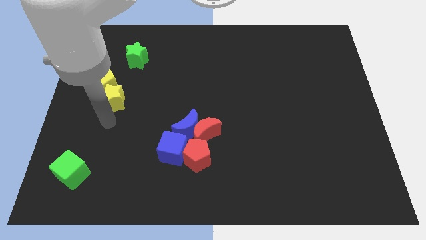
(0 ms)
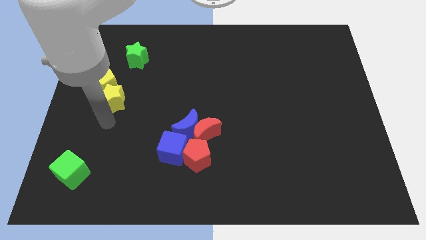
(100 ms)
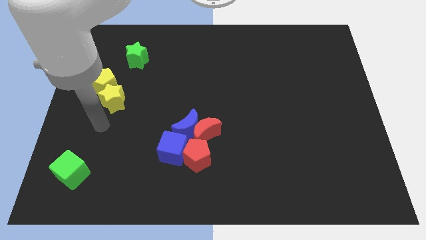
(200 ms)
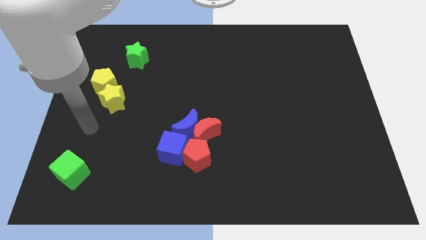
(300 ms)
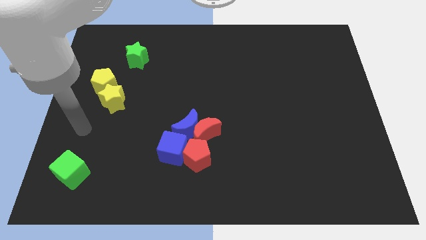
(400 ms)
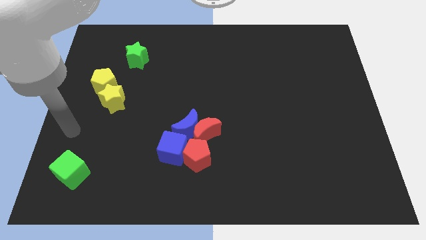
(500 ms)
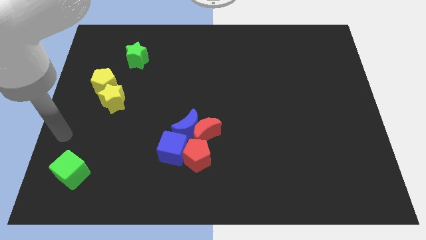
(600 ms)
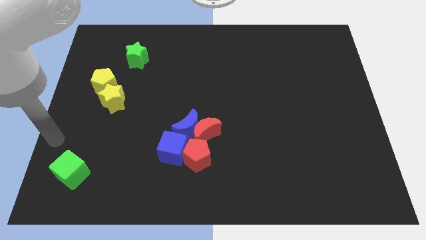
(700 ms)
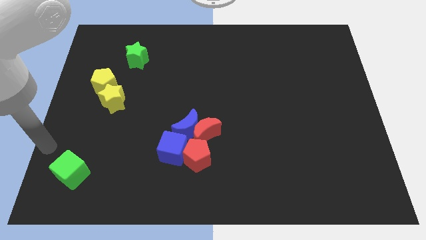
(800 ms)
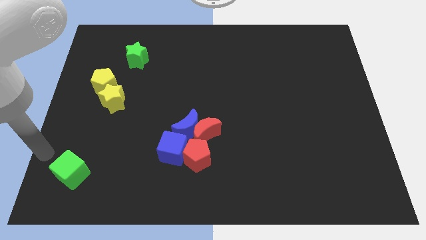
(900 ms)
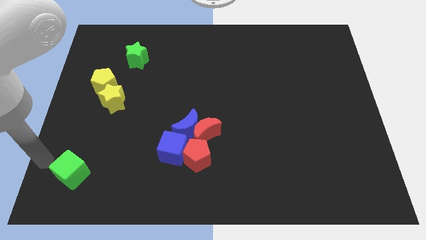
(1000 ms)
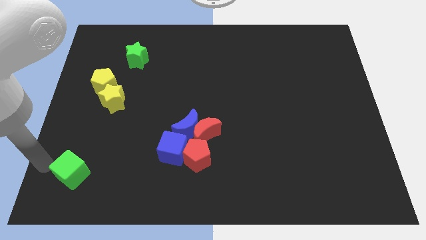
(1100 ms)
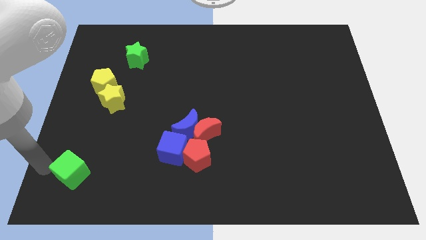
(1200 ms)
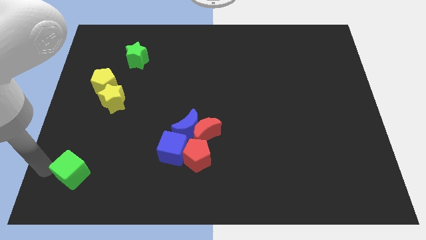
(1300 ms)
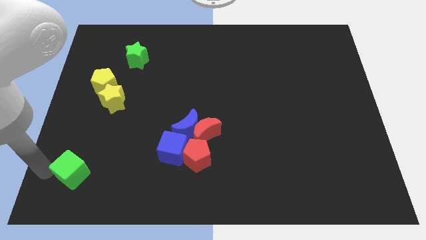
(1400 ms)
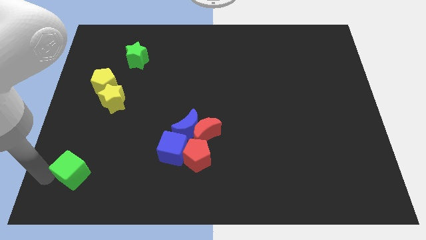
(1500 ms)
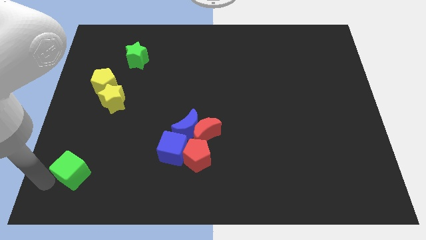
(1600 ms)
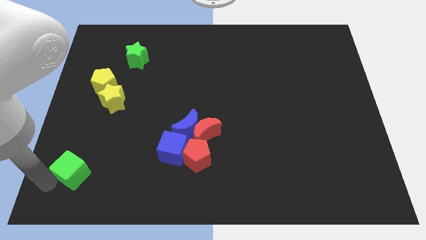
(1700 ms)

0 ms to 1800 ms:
move your arm away from the yellow star

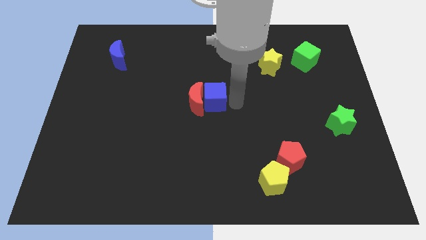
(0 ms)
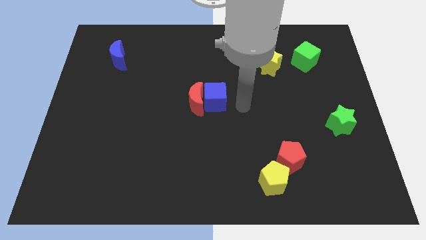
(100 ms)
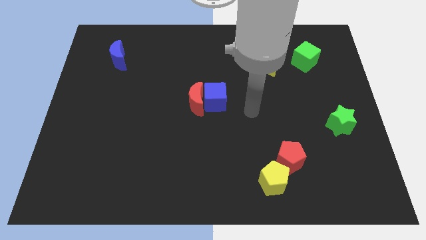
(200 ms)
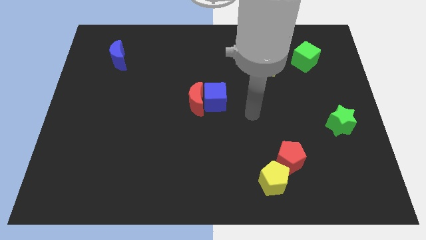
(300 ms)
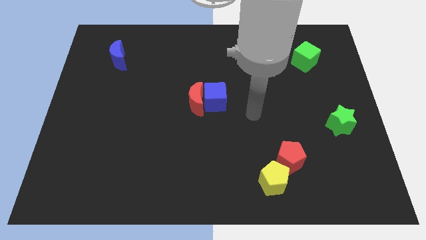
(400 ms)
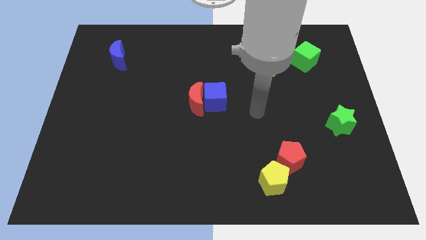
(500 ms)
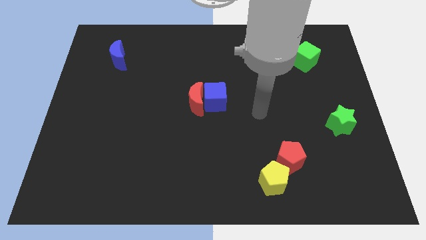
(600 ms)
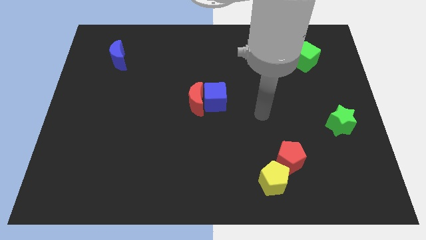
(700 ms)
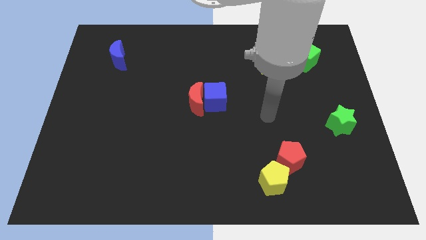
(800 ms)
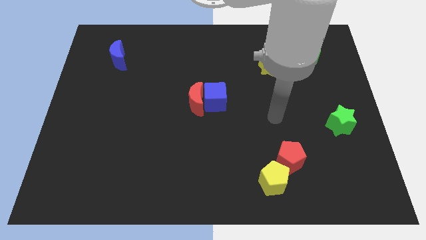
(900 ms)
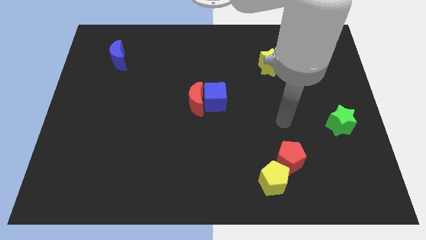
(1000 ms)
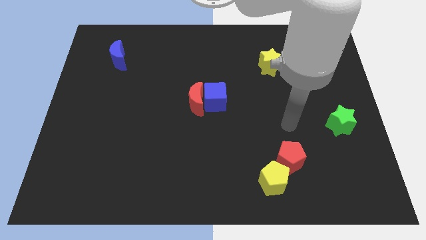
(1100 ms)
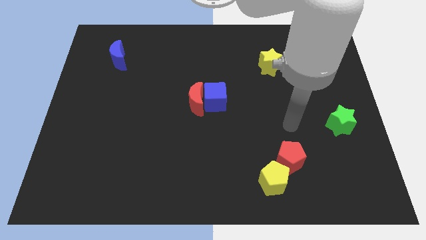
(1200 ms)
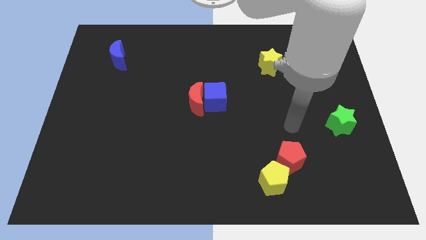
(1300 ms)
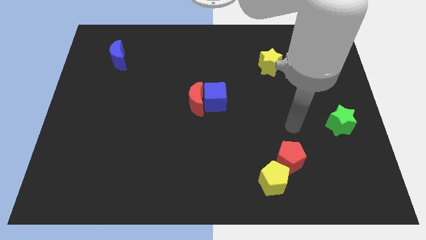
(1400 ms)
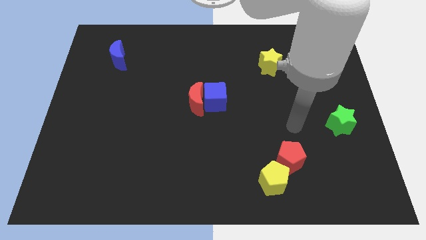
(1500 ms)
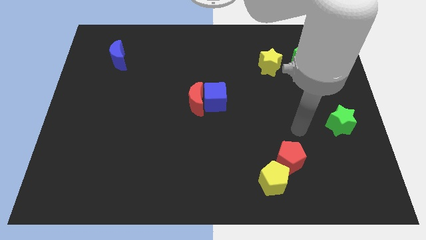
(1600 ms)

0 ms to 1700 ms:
move your arm away from the blue cube

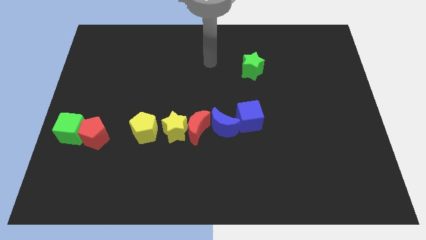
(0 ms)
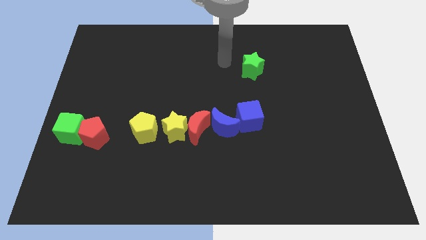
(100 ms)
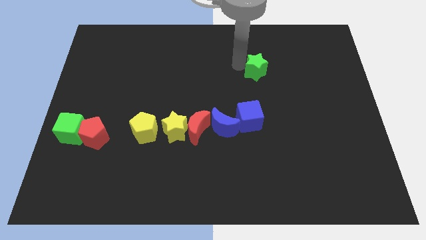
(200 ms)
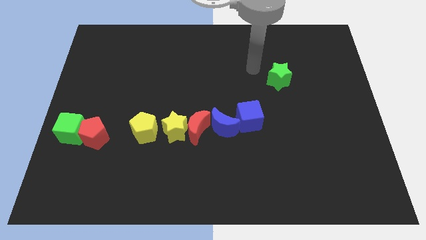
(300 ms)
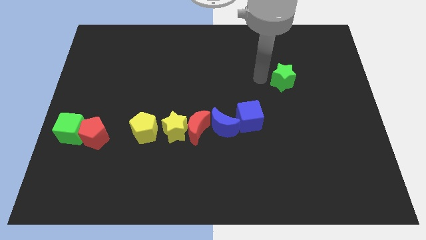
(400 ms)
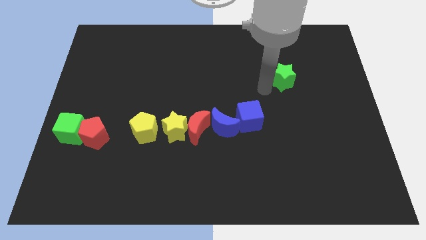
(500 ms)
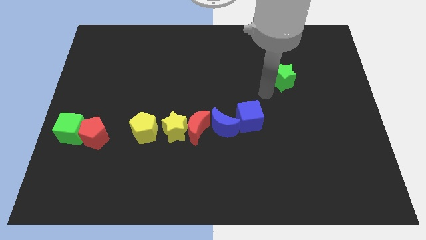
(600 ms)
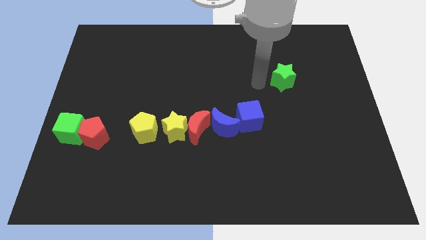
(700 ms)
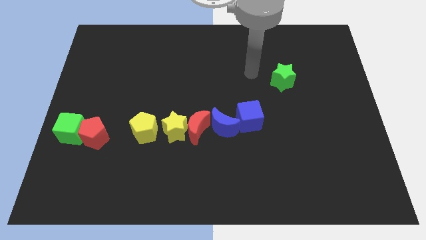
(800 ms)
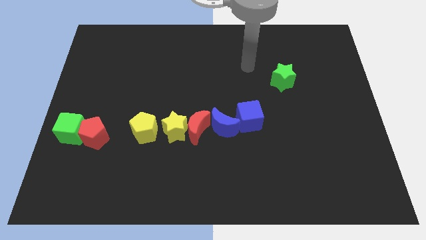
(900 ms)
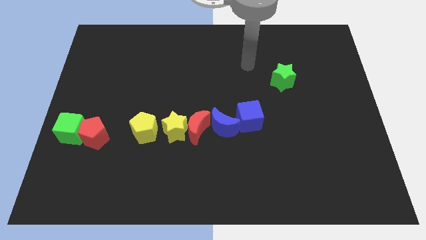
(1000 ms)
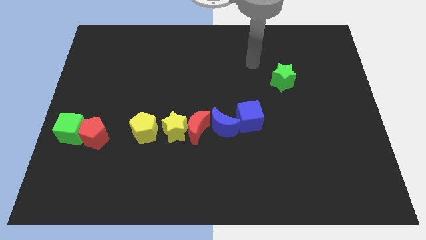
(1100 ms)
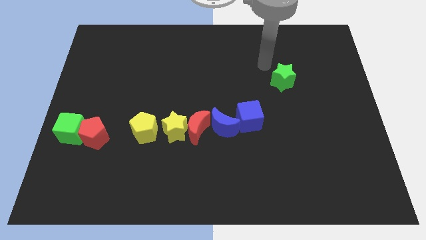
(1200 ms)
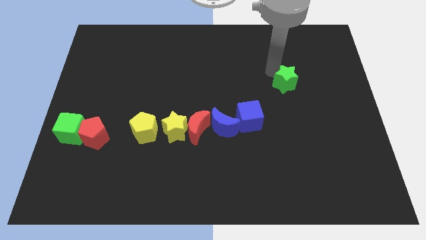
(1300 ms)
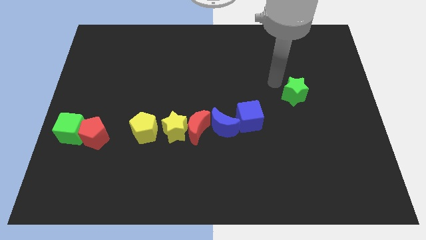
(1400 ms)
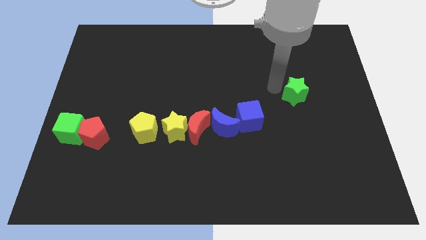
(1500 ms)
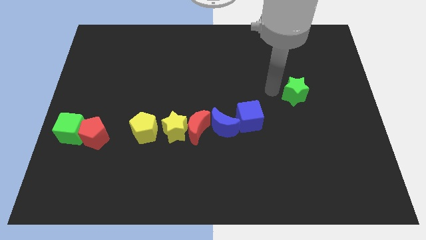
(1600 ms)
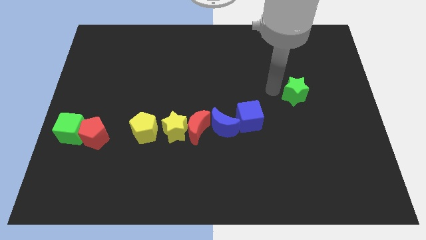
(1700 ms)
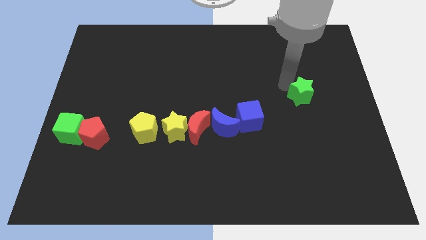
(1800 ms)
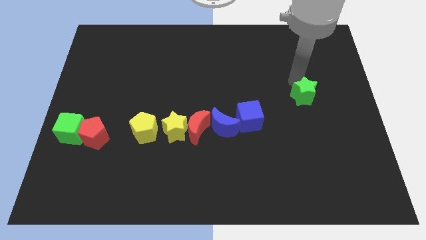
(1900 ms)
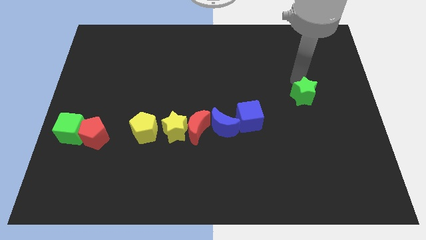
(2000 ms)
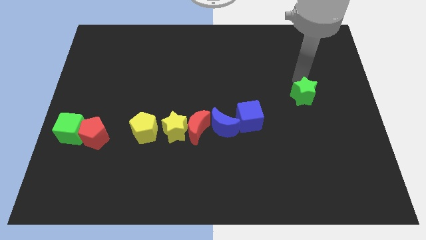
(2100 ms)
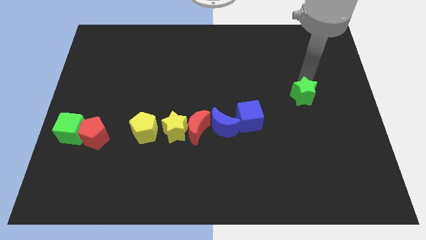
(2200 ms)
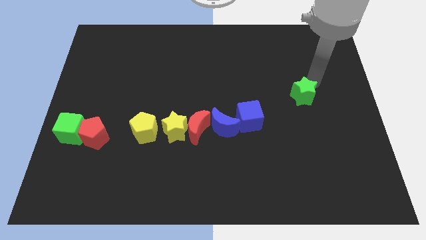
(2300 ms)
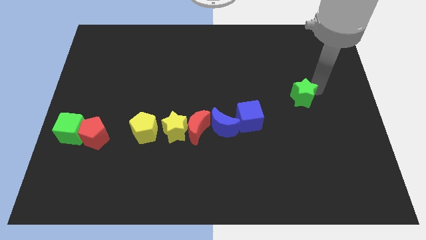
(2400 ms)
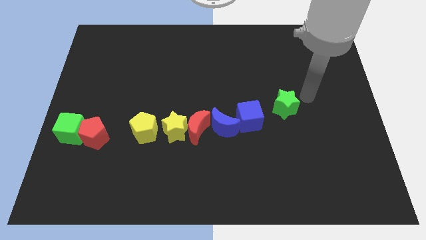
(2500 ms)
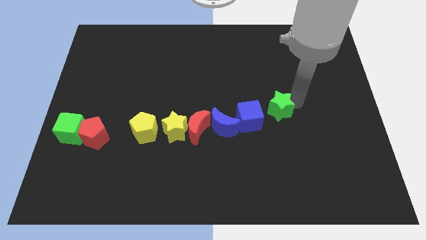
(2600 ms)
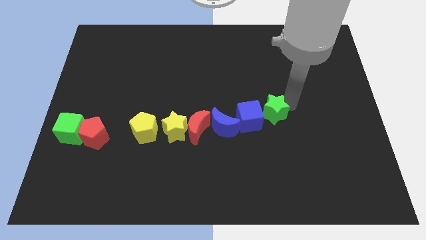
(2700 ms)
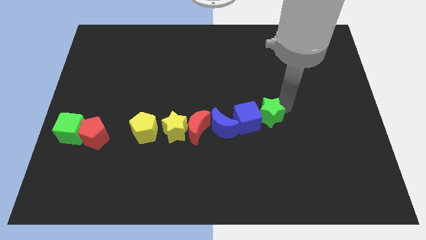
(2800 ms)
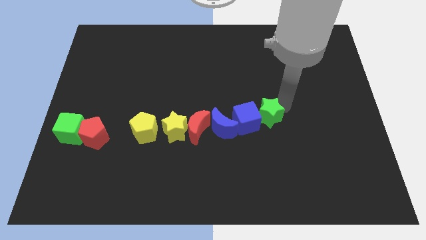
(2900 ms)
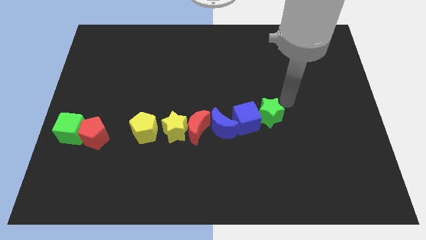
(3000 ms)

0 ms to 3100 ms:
place the green star towards the right of the blue cube

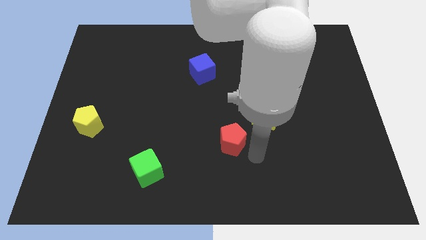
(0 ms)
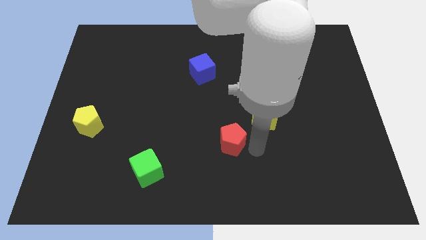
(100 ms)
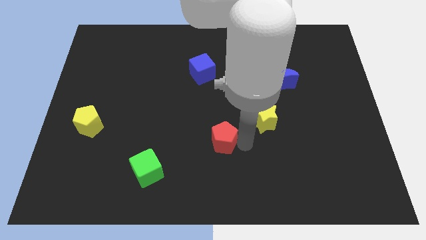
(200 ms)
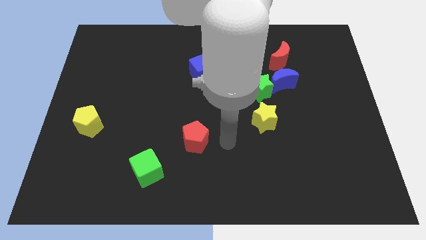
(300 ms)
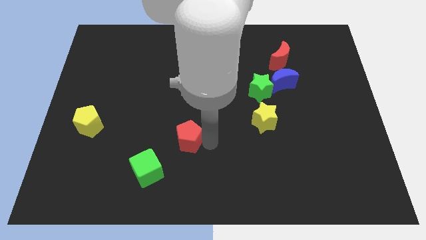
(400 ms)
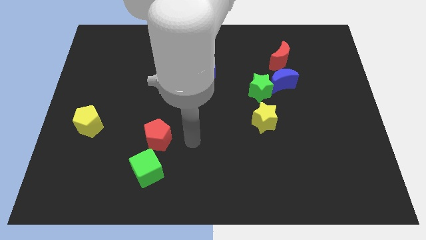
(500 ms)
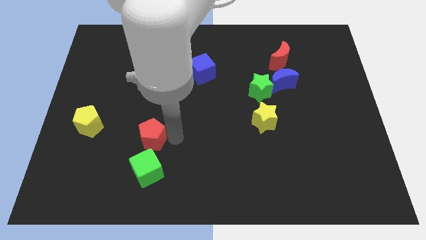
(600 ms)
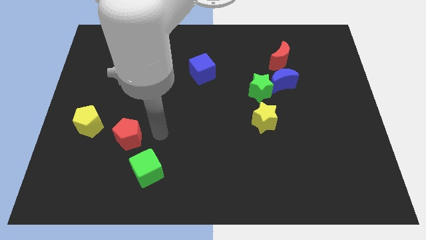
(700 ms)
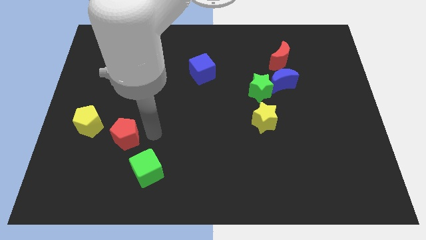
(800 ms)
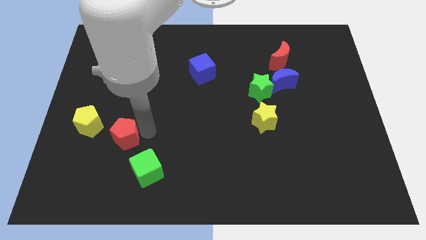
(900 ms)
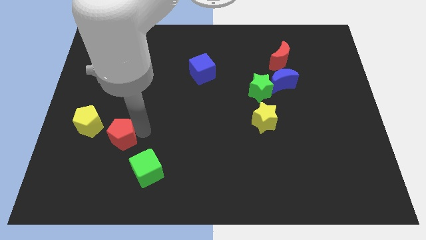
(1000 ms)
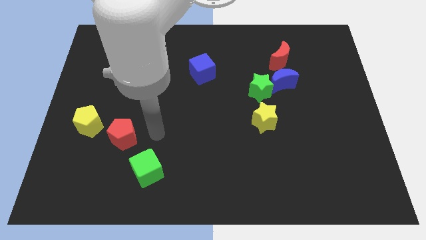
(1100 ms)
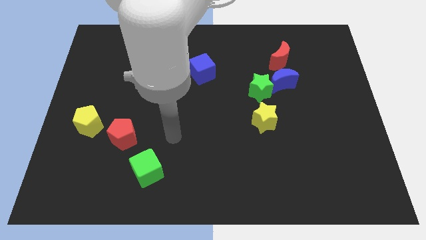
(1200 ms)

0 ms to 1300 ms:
push the red pentagon towards yellow pentagon

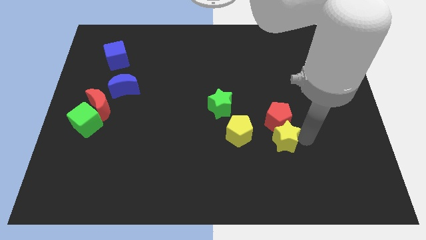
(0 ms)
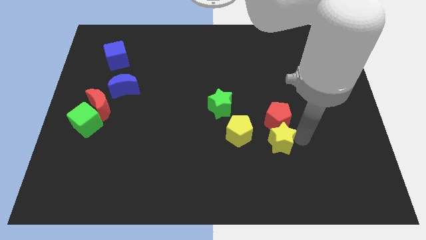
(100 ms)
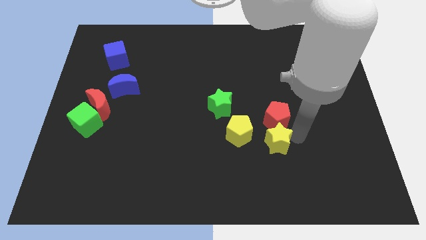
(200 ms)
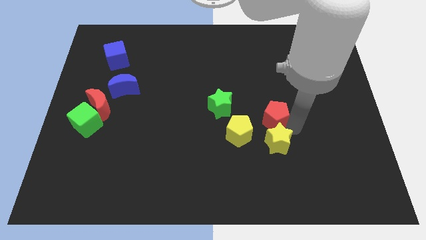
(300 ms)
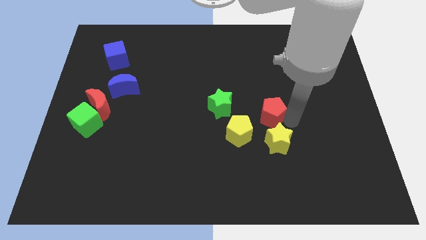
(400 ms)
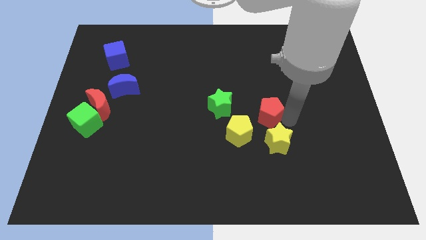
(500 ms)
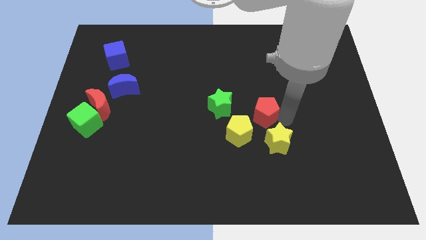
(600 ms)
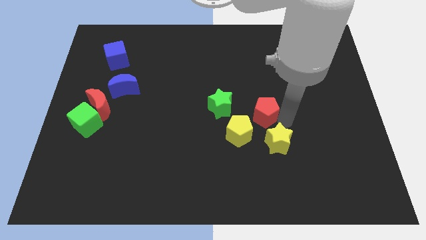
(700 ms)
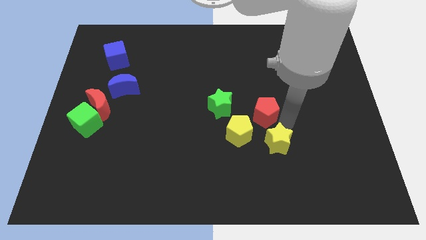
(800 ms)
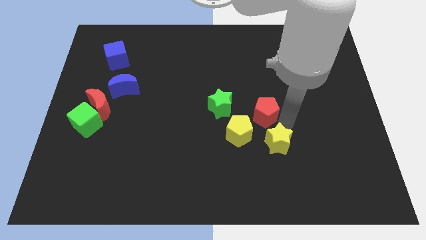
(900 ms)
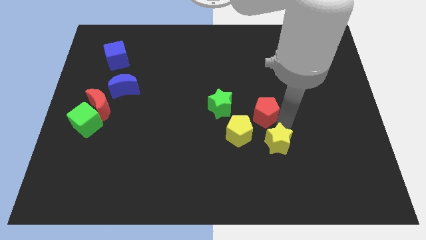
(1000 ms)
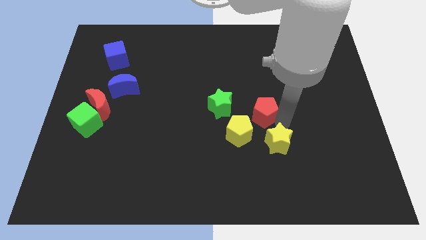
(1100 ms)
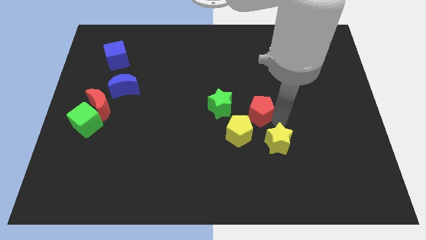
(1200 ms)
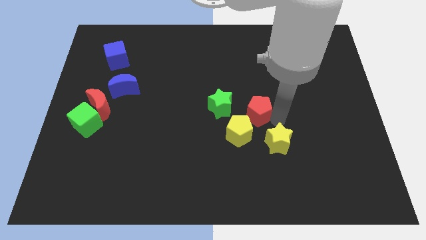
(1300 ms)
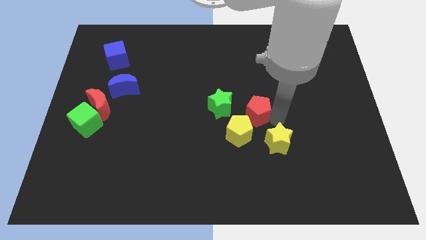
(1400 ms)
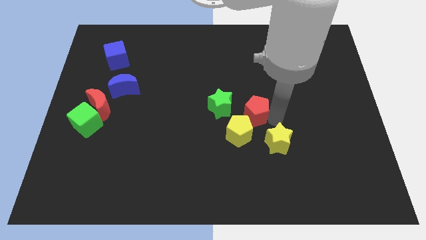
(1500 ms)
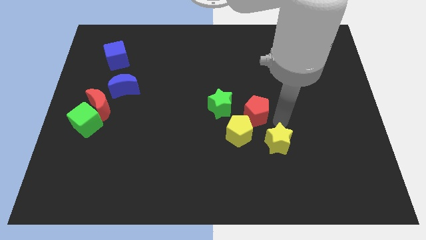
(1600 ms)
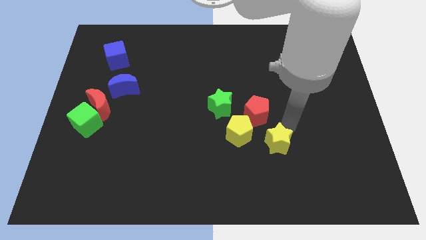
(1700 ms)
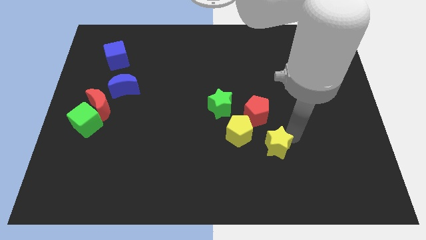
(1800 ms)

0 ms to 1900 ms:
push the red pentagon towards the green star
